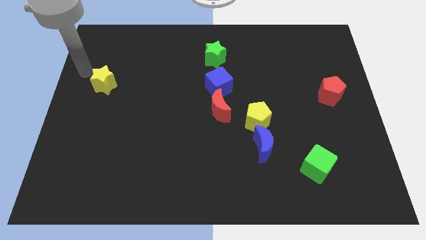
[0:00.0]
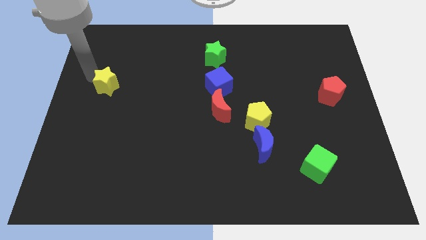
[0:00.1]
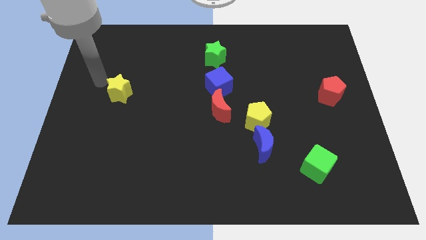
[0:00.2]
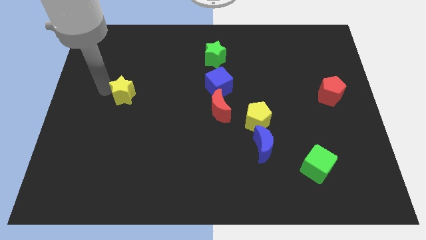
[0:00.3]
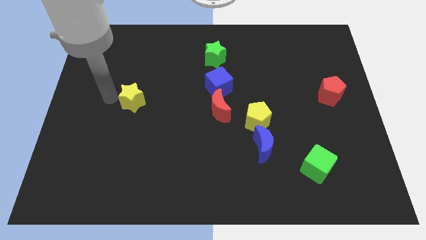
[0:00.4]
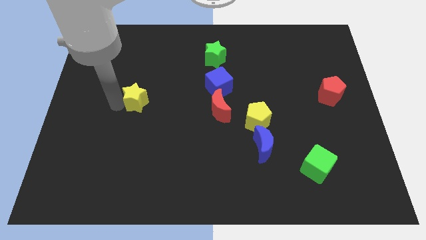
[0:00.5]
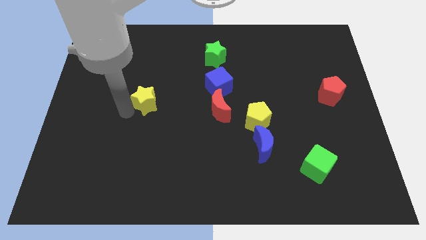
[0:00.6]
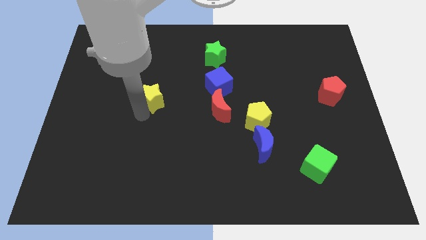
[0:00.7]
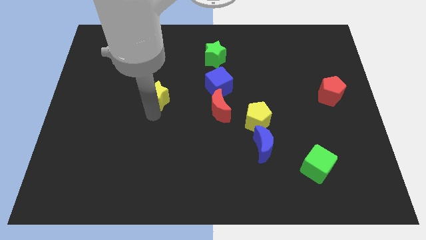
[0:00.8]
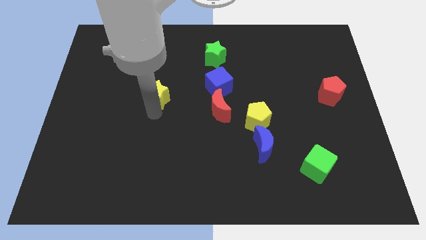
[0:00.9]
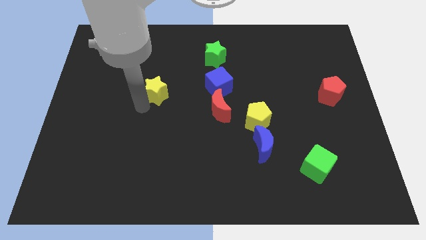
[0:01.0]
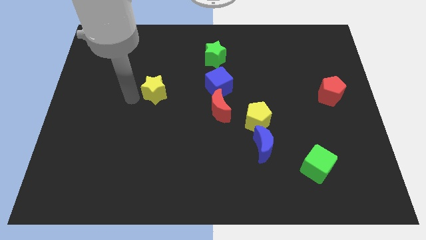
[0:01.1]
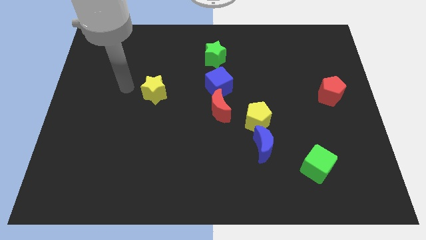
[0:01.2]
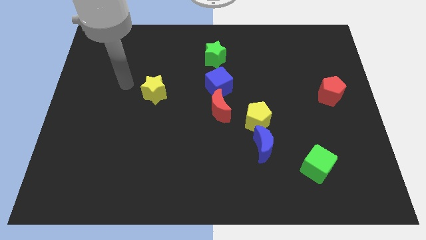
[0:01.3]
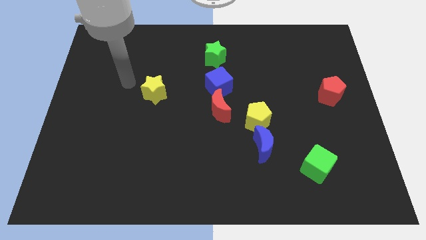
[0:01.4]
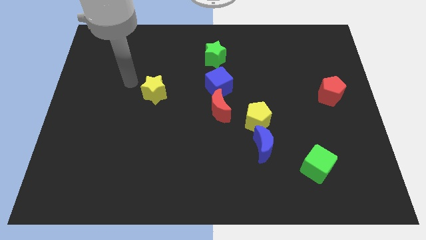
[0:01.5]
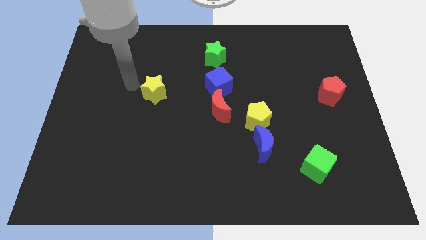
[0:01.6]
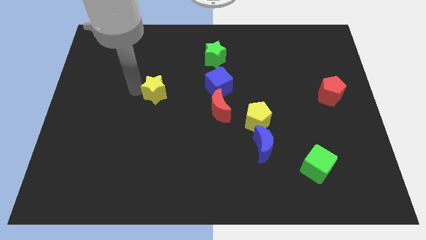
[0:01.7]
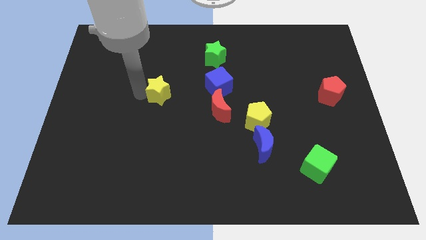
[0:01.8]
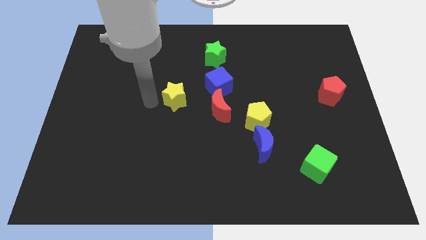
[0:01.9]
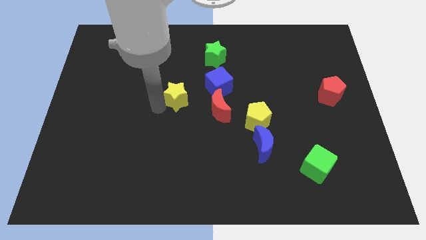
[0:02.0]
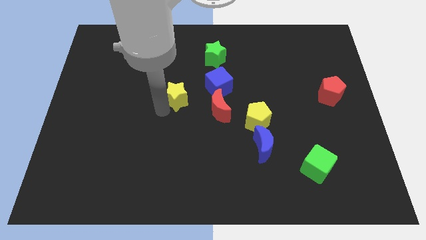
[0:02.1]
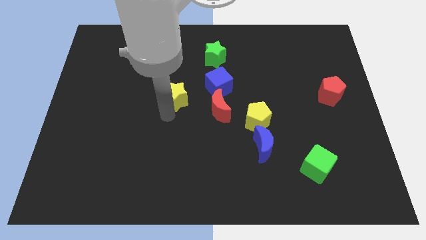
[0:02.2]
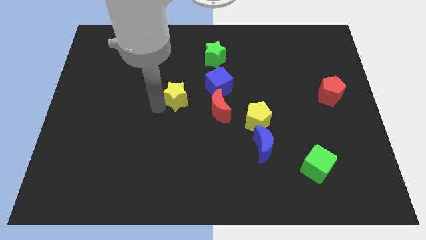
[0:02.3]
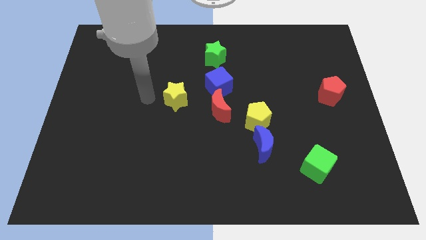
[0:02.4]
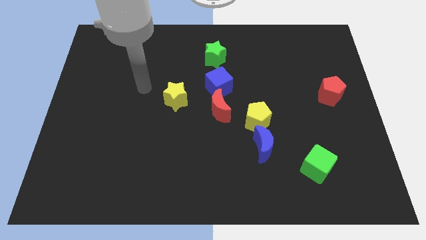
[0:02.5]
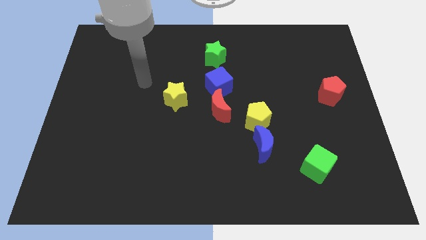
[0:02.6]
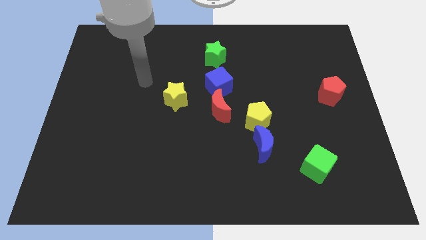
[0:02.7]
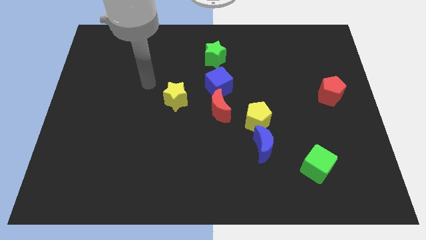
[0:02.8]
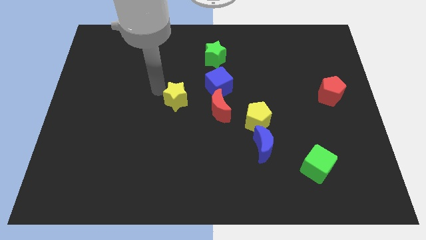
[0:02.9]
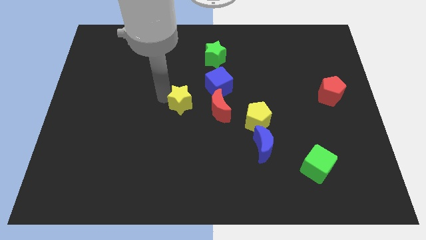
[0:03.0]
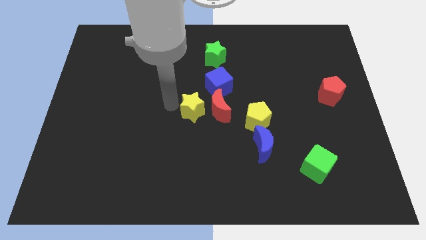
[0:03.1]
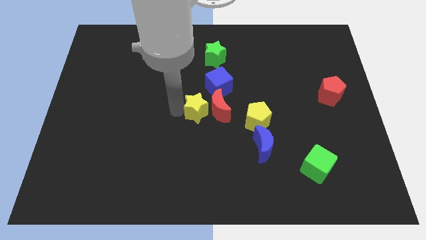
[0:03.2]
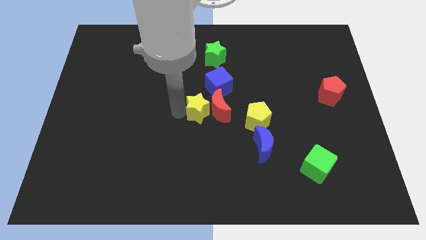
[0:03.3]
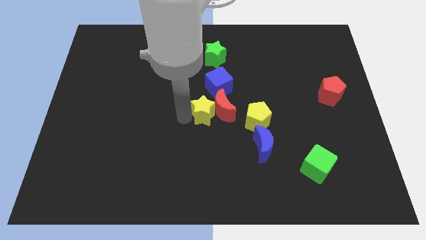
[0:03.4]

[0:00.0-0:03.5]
push the yellow star into the red crescent

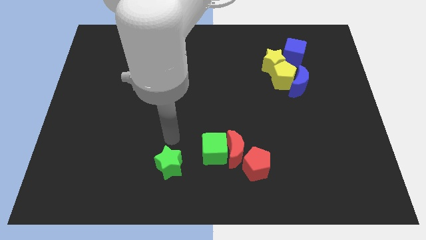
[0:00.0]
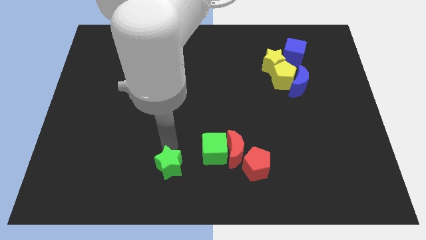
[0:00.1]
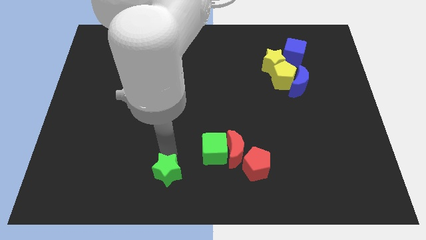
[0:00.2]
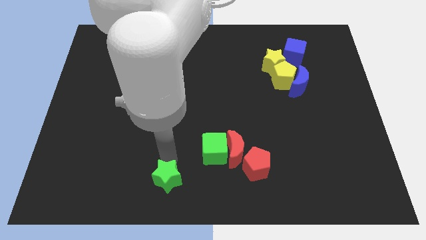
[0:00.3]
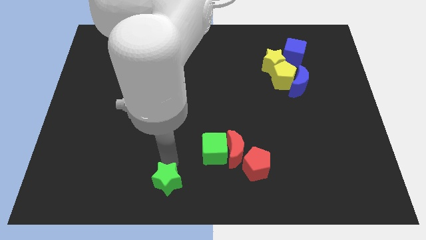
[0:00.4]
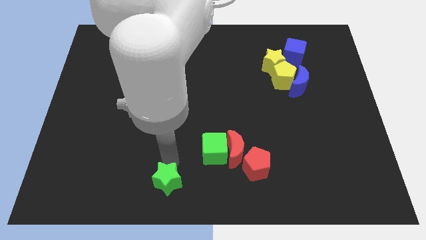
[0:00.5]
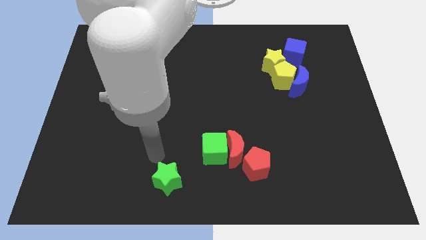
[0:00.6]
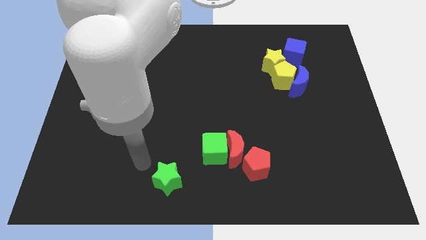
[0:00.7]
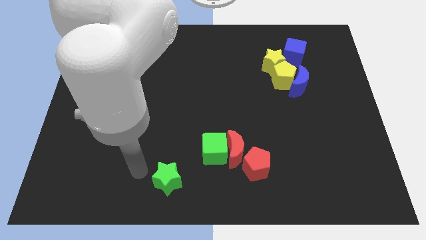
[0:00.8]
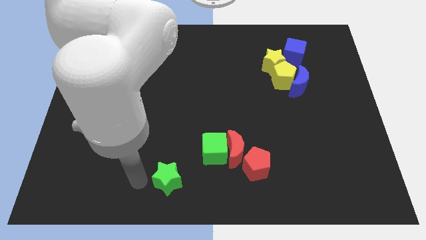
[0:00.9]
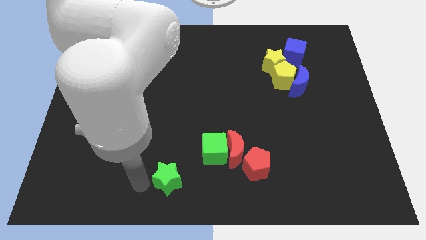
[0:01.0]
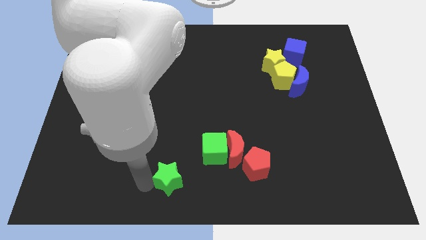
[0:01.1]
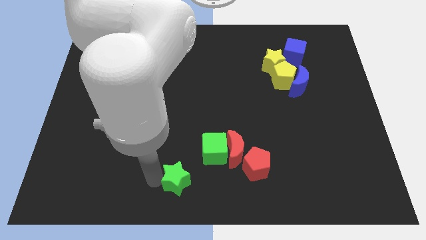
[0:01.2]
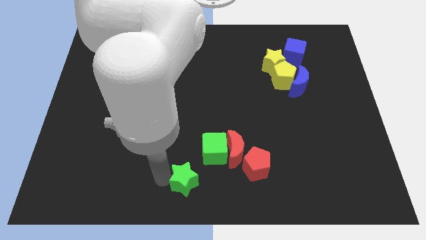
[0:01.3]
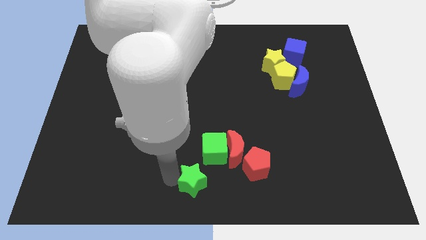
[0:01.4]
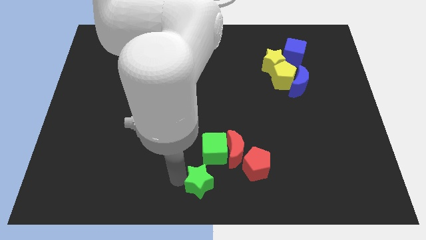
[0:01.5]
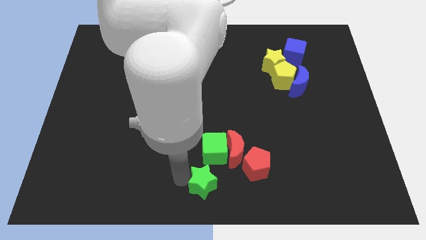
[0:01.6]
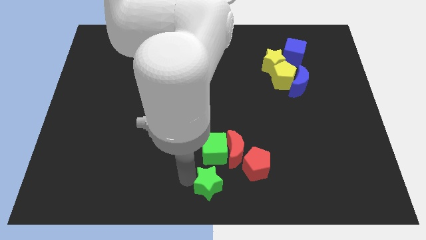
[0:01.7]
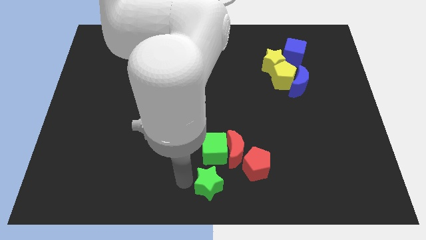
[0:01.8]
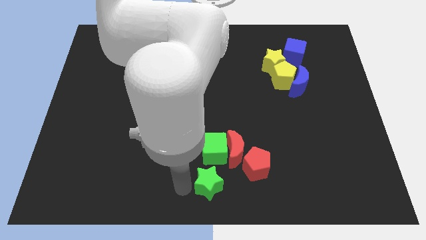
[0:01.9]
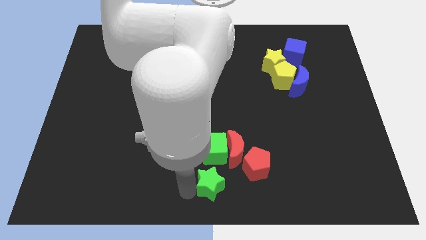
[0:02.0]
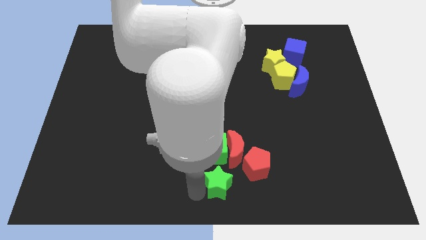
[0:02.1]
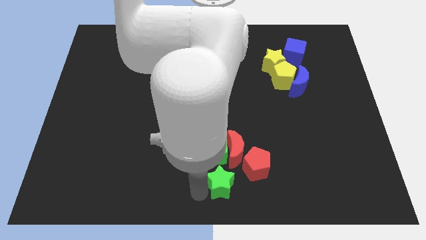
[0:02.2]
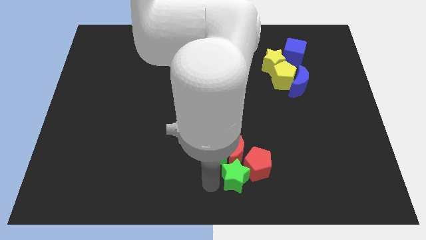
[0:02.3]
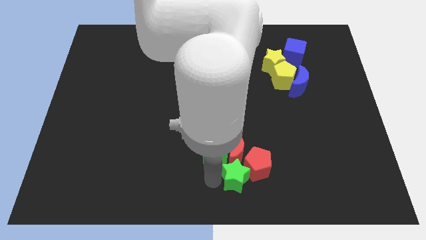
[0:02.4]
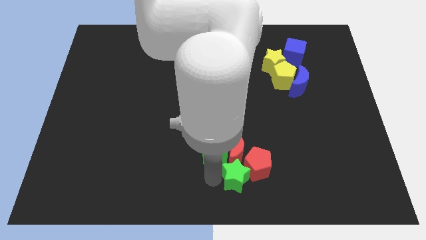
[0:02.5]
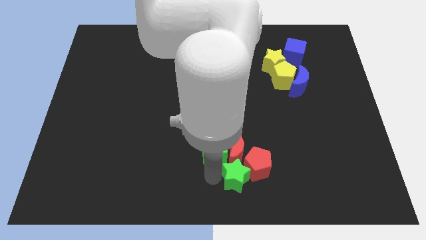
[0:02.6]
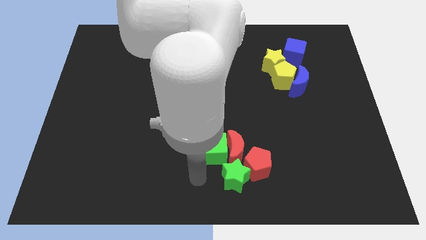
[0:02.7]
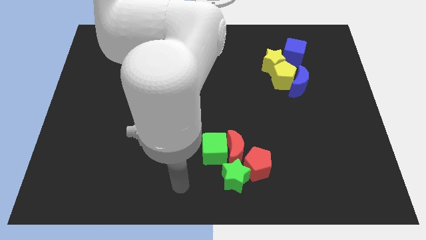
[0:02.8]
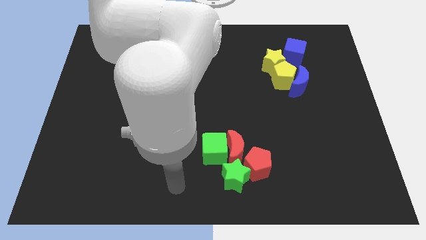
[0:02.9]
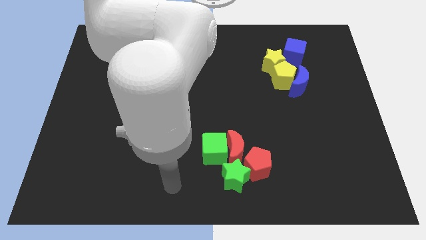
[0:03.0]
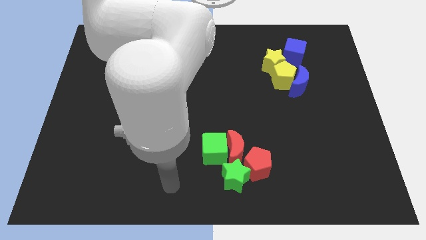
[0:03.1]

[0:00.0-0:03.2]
put the green star on the left side of the red pentagon

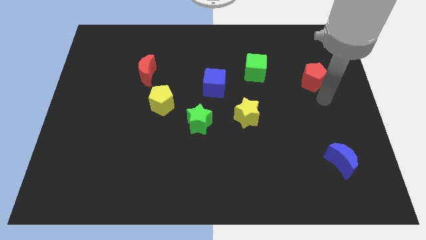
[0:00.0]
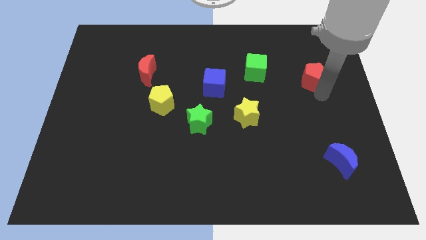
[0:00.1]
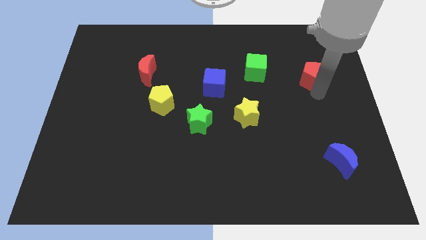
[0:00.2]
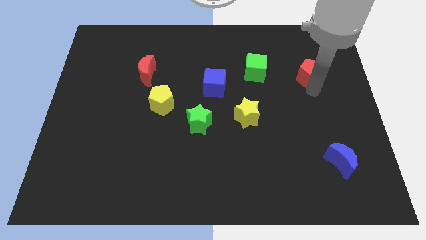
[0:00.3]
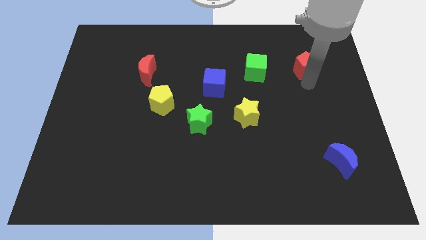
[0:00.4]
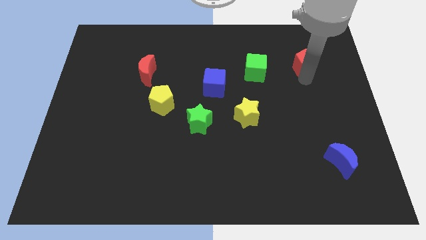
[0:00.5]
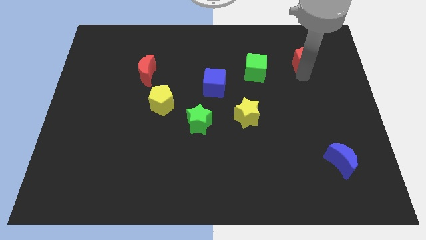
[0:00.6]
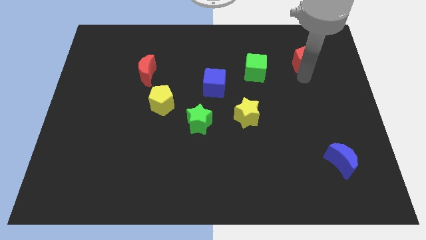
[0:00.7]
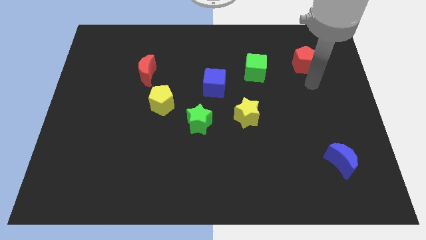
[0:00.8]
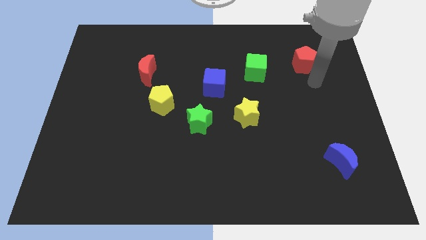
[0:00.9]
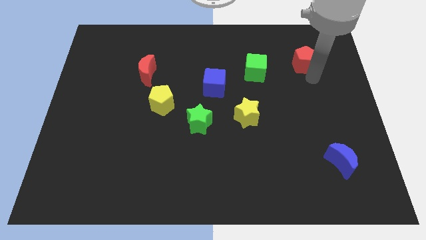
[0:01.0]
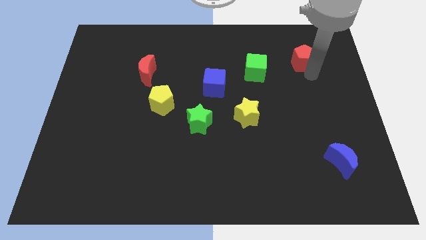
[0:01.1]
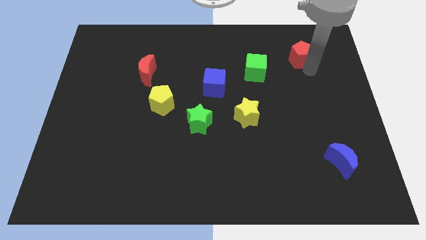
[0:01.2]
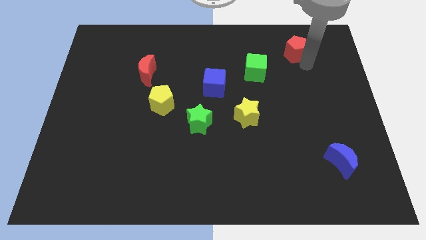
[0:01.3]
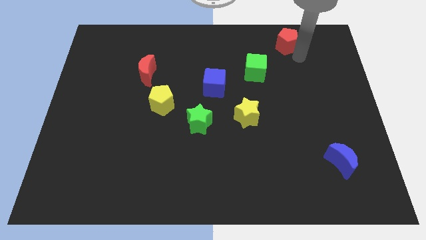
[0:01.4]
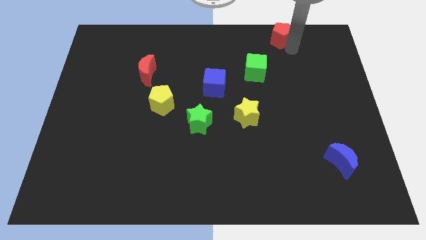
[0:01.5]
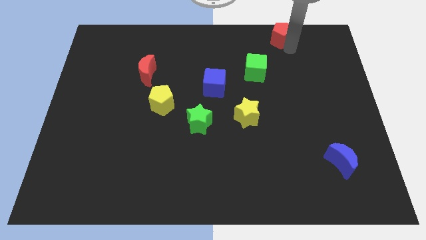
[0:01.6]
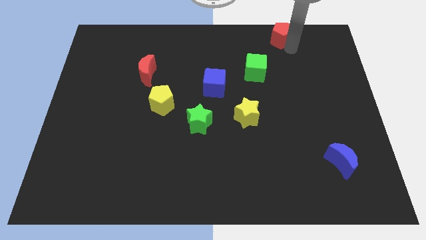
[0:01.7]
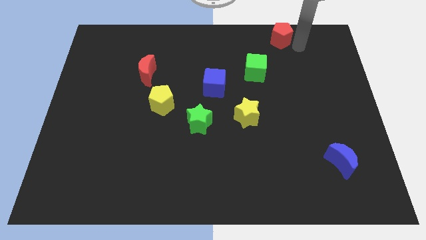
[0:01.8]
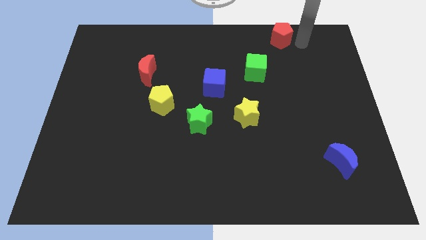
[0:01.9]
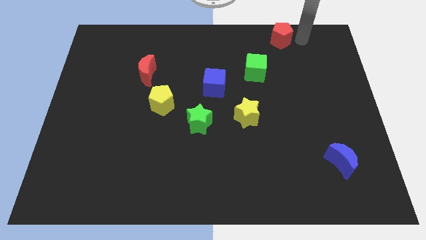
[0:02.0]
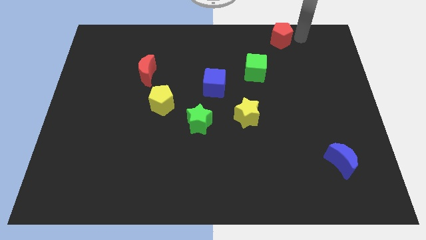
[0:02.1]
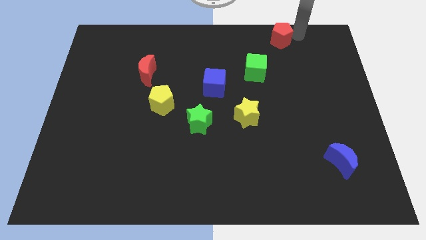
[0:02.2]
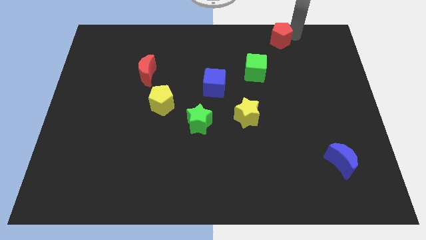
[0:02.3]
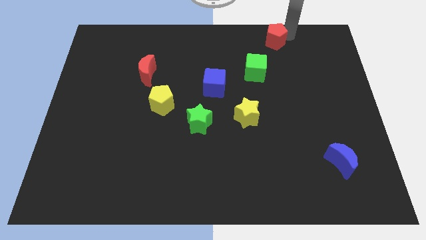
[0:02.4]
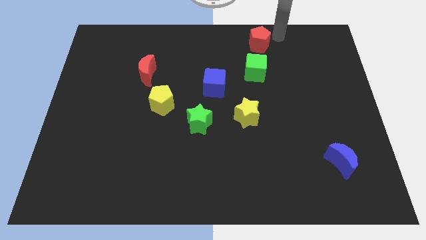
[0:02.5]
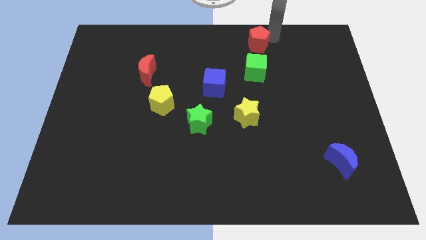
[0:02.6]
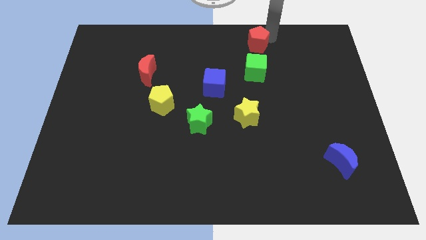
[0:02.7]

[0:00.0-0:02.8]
move the red pentagon to the top of the green cube
